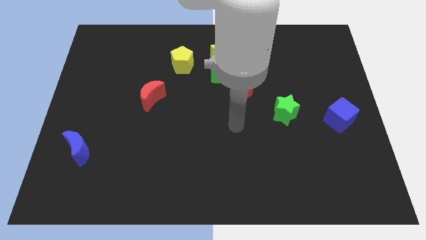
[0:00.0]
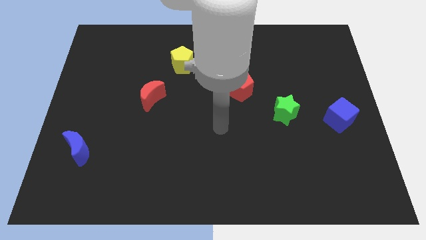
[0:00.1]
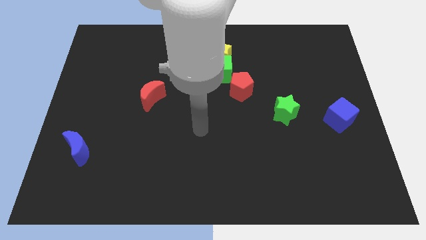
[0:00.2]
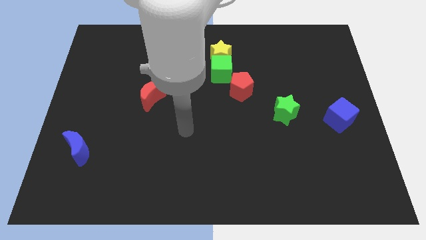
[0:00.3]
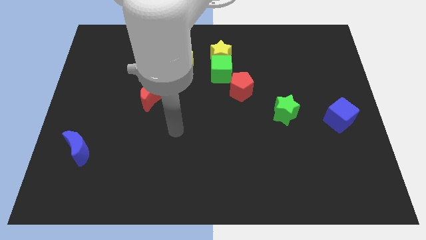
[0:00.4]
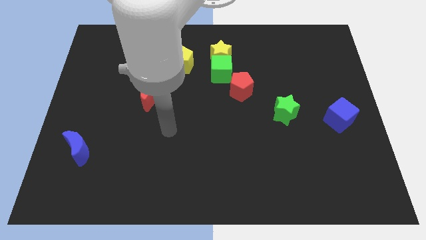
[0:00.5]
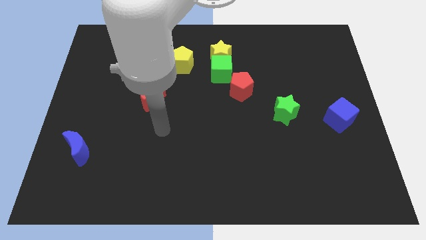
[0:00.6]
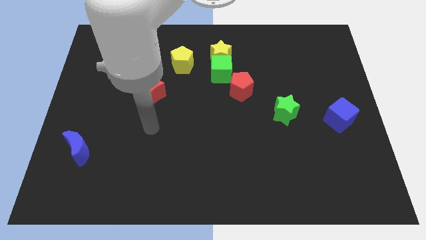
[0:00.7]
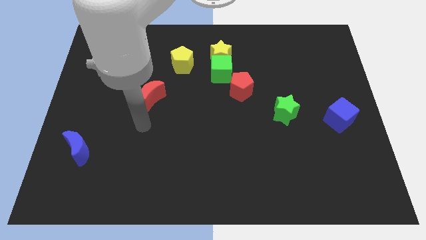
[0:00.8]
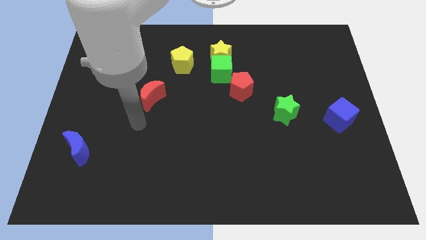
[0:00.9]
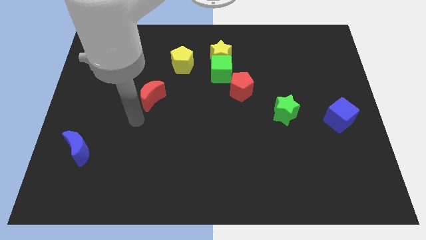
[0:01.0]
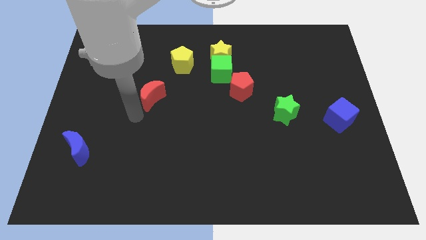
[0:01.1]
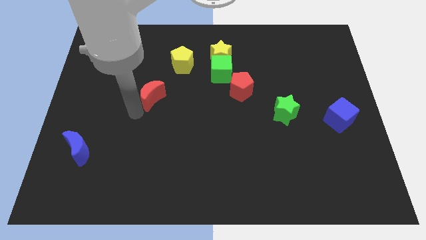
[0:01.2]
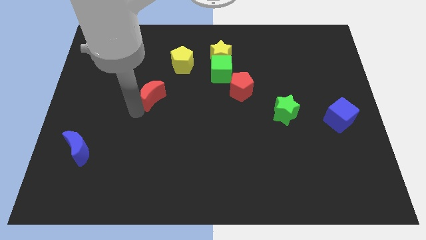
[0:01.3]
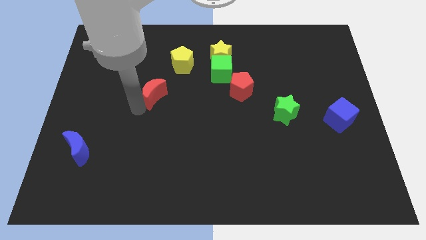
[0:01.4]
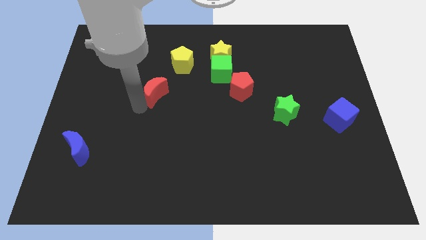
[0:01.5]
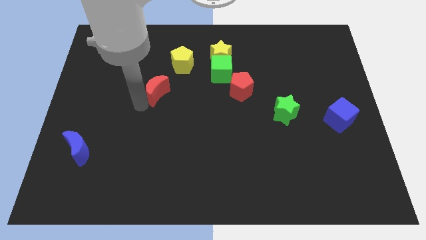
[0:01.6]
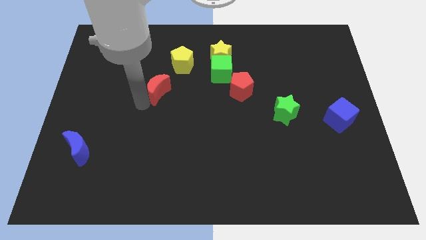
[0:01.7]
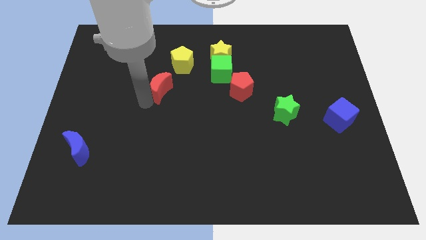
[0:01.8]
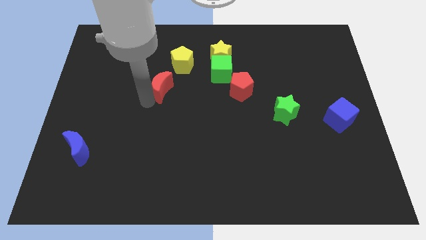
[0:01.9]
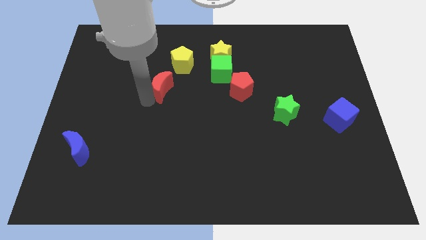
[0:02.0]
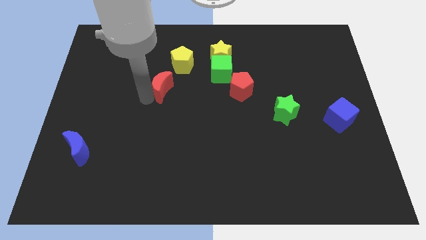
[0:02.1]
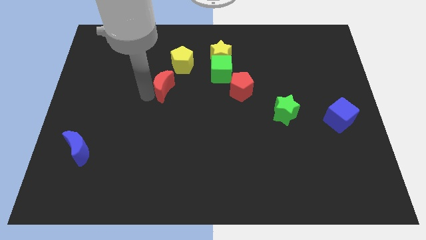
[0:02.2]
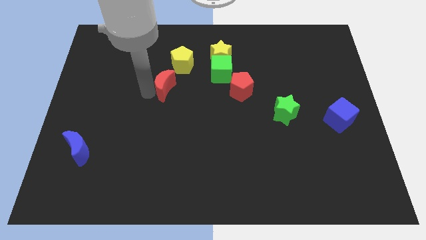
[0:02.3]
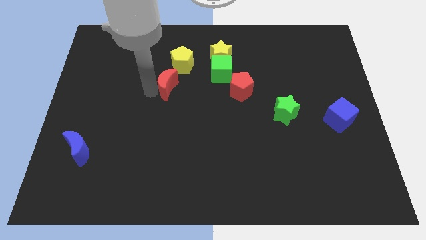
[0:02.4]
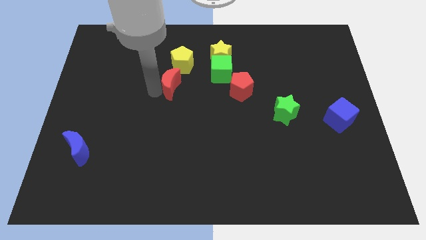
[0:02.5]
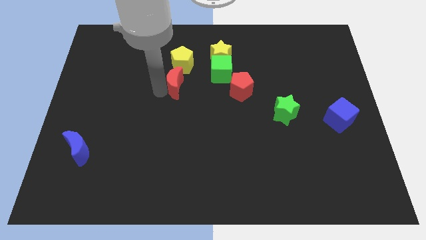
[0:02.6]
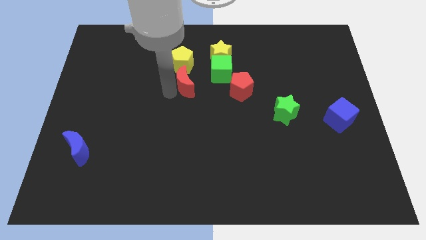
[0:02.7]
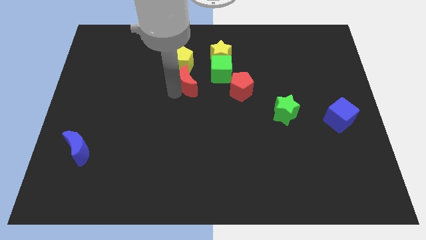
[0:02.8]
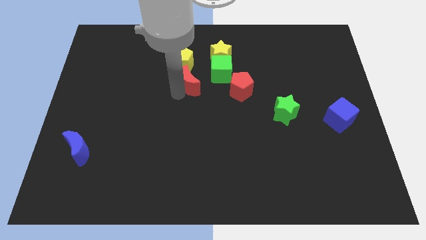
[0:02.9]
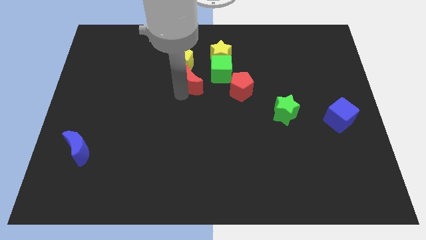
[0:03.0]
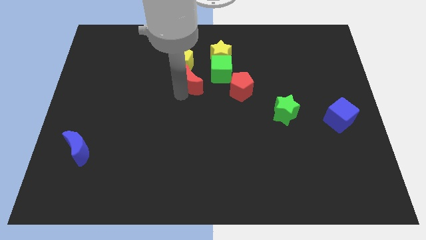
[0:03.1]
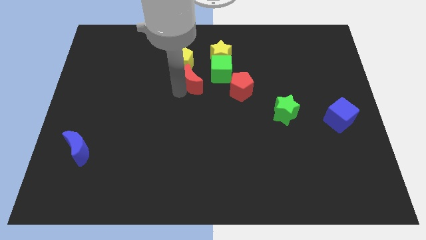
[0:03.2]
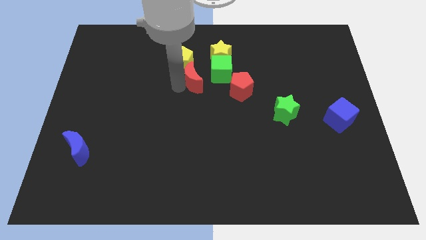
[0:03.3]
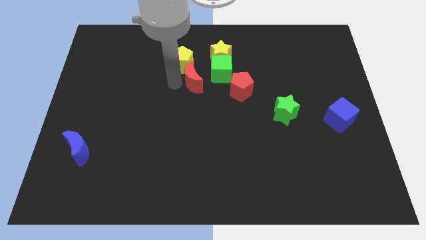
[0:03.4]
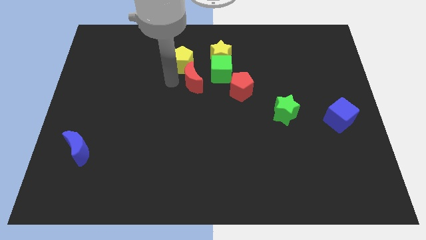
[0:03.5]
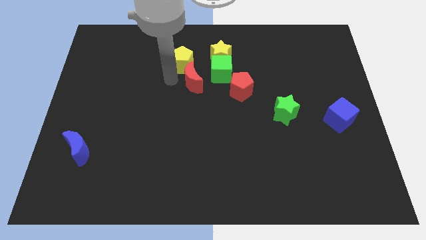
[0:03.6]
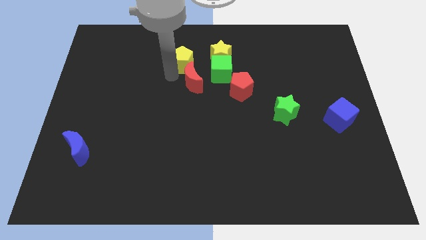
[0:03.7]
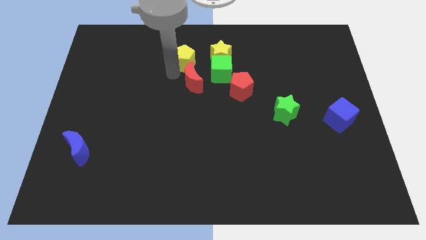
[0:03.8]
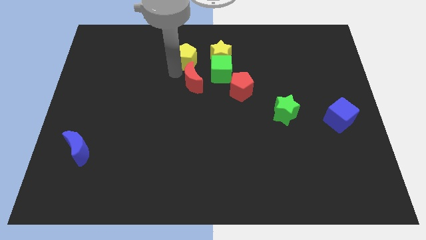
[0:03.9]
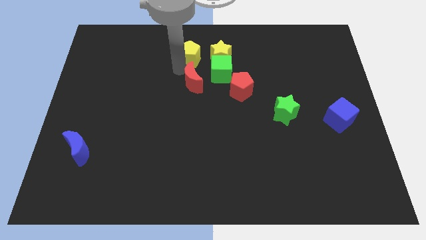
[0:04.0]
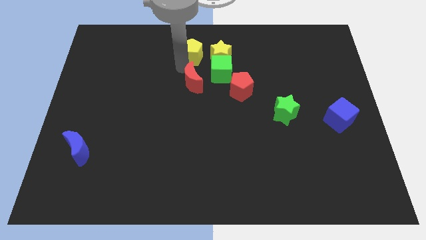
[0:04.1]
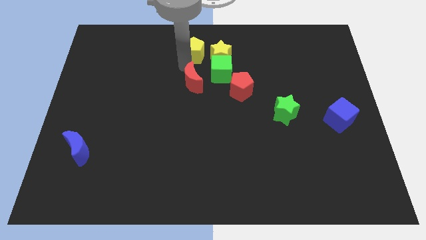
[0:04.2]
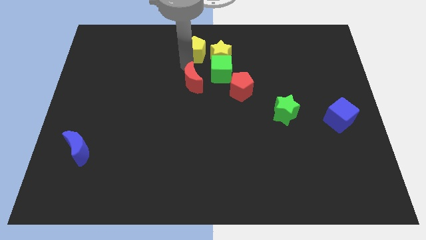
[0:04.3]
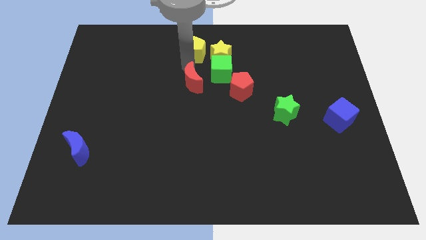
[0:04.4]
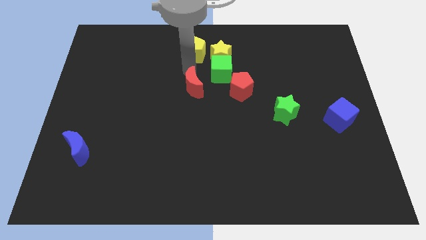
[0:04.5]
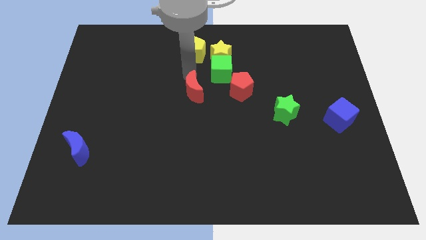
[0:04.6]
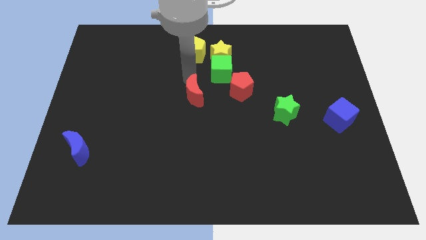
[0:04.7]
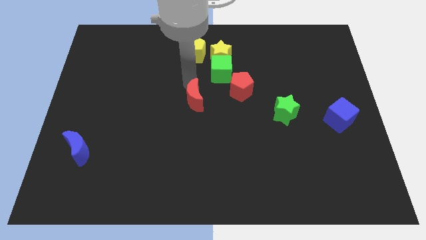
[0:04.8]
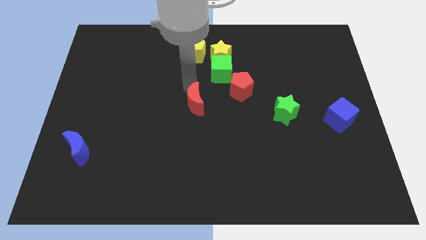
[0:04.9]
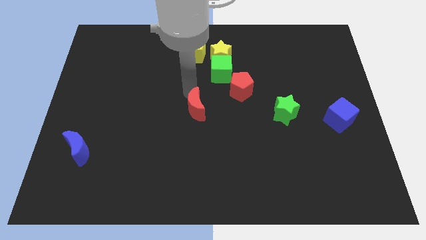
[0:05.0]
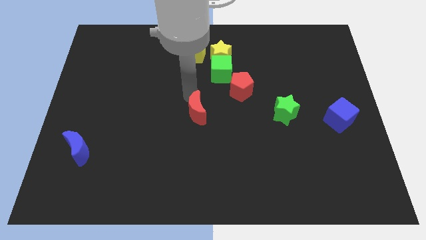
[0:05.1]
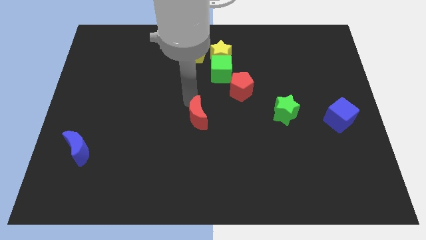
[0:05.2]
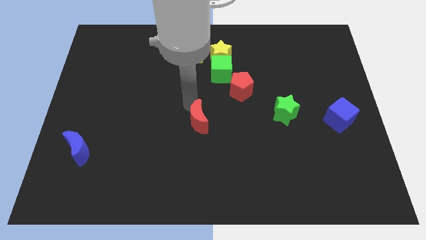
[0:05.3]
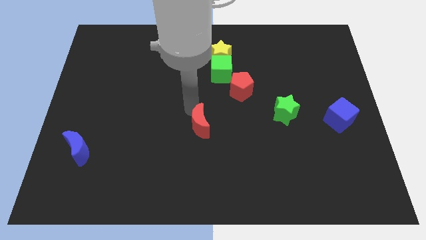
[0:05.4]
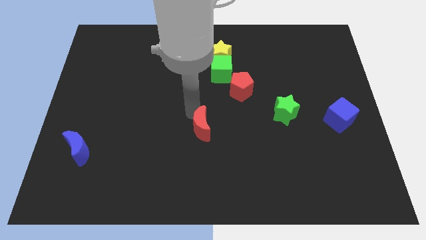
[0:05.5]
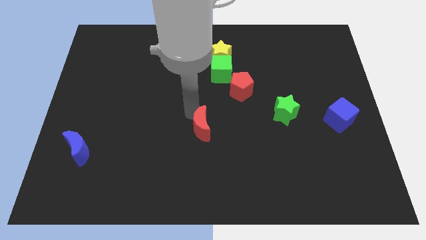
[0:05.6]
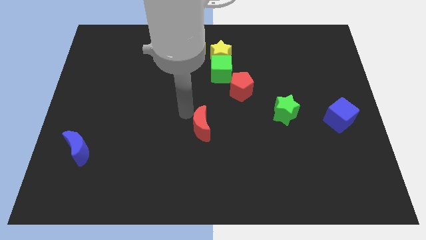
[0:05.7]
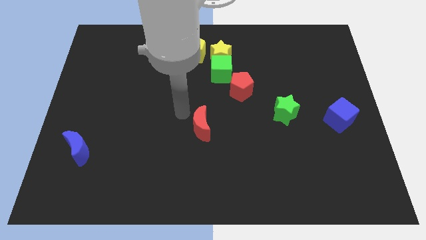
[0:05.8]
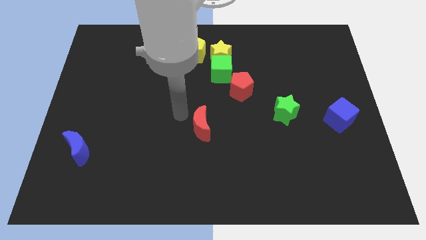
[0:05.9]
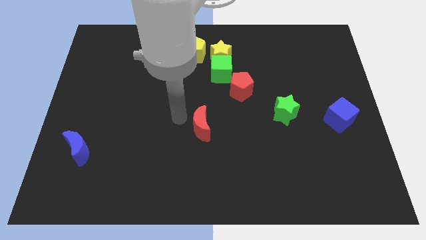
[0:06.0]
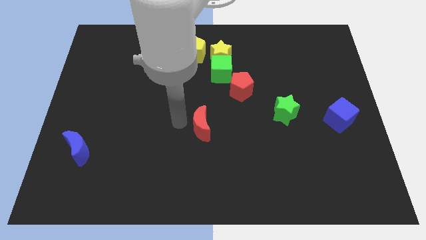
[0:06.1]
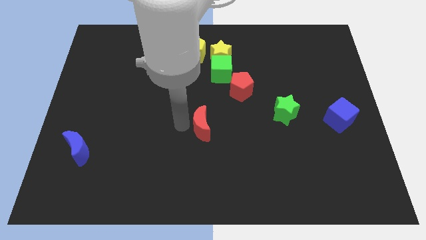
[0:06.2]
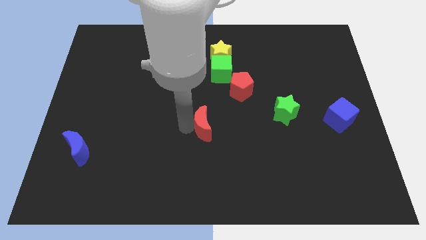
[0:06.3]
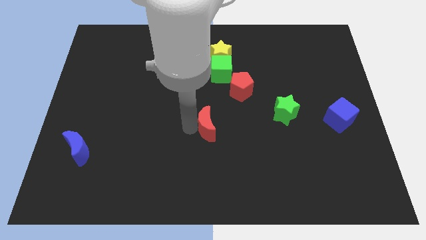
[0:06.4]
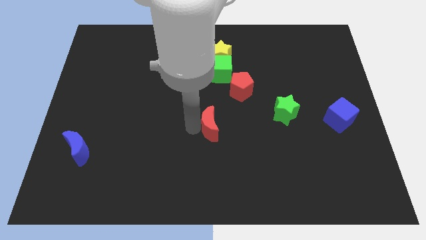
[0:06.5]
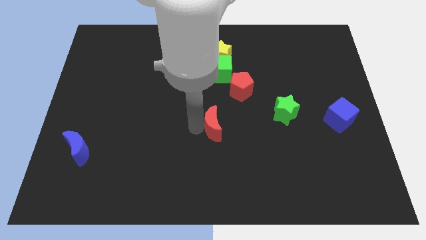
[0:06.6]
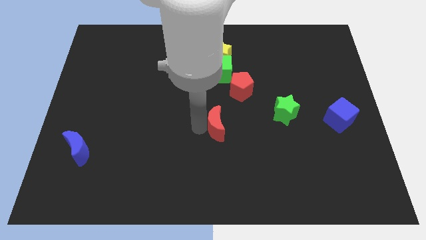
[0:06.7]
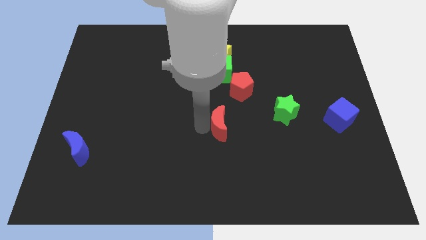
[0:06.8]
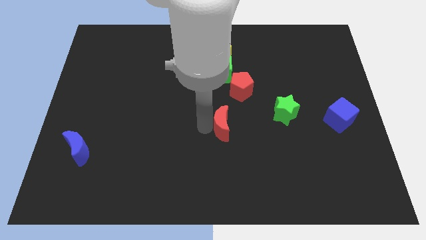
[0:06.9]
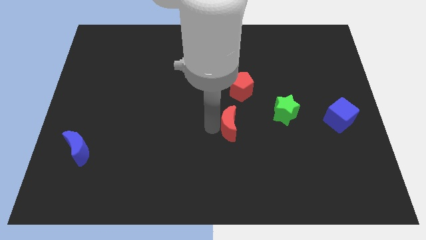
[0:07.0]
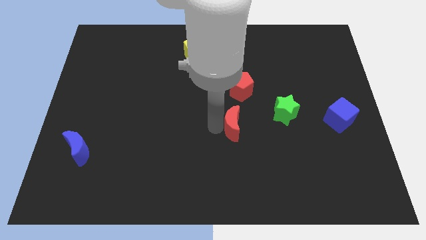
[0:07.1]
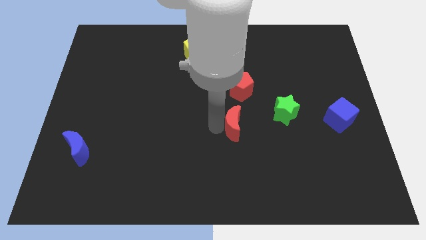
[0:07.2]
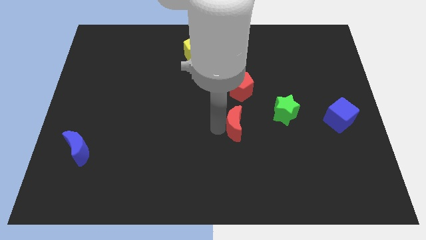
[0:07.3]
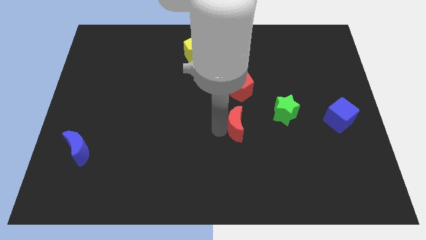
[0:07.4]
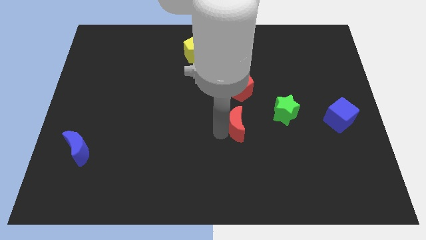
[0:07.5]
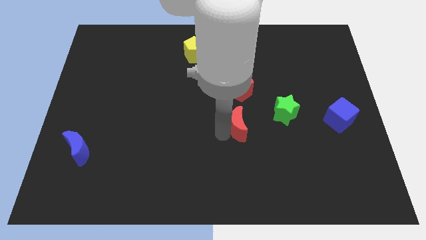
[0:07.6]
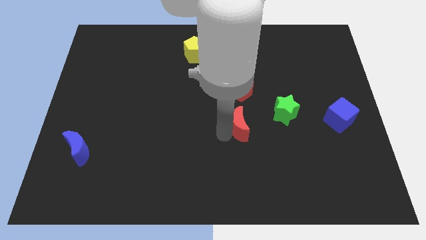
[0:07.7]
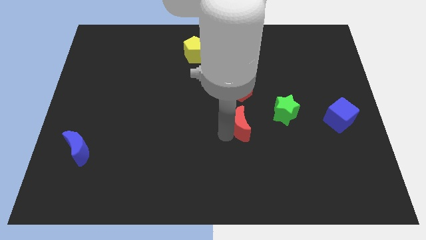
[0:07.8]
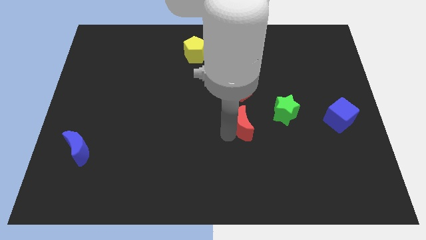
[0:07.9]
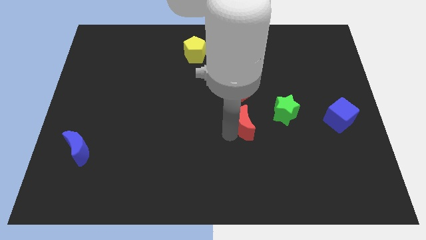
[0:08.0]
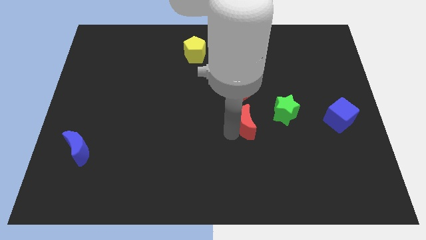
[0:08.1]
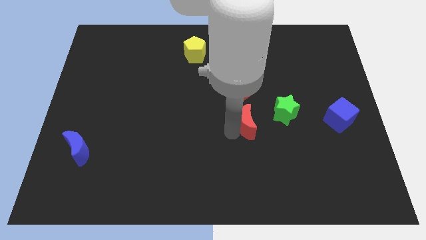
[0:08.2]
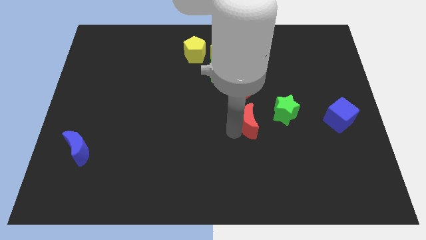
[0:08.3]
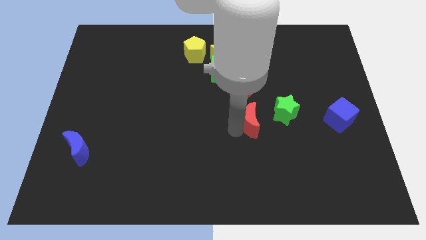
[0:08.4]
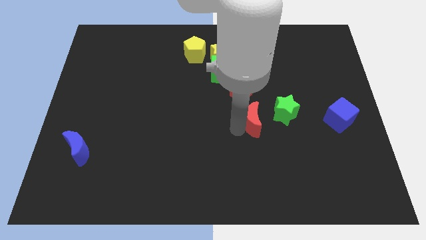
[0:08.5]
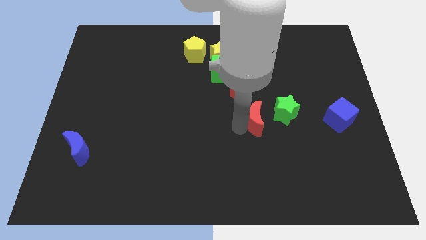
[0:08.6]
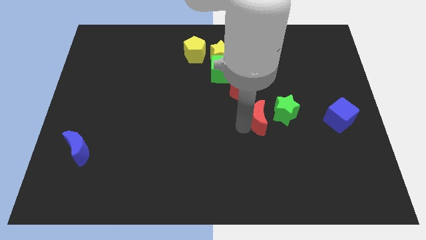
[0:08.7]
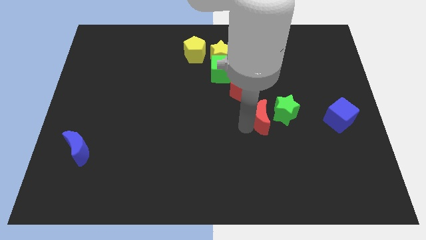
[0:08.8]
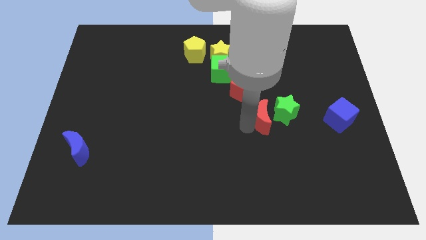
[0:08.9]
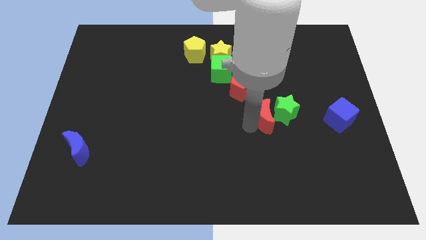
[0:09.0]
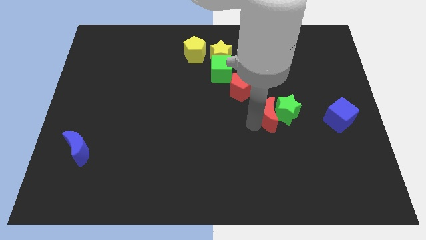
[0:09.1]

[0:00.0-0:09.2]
push the red moon to the green star
